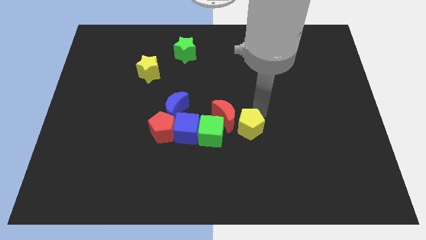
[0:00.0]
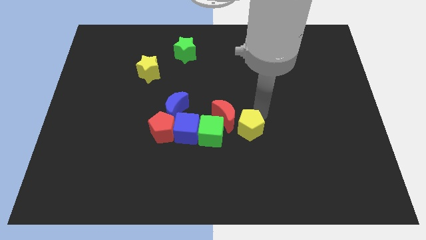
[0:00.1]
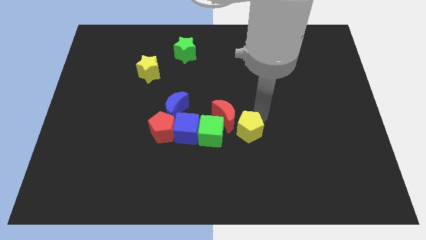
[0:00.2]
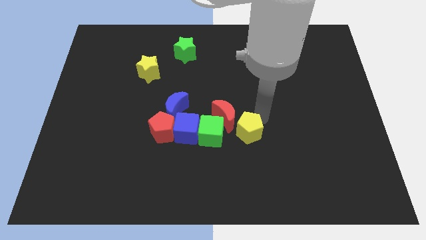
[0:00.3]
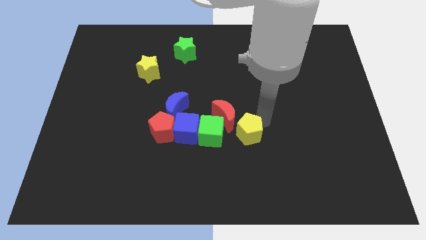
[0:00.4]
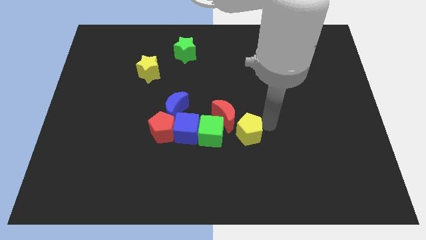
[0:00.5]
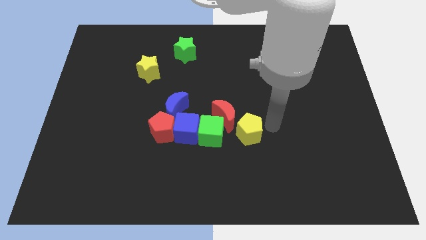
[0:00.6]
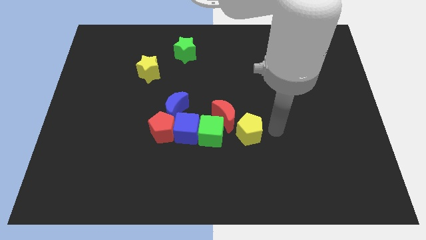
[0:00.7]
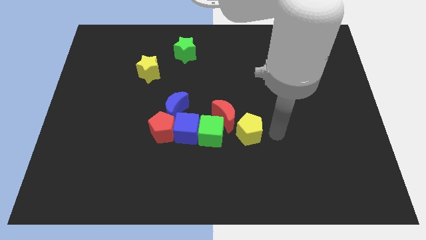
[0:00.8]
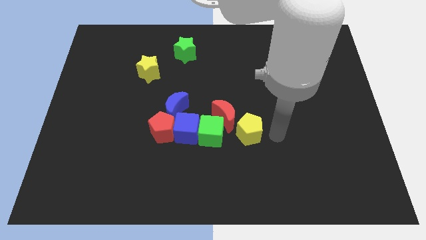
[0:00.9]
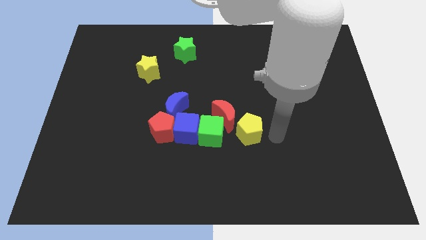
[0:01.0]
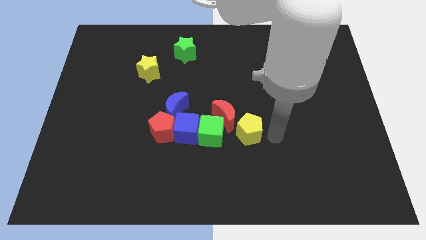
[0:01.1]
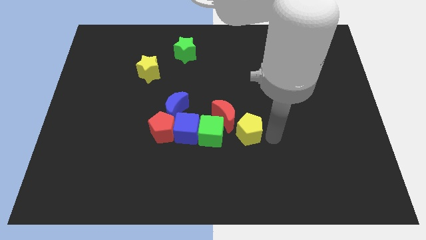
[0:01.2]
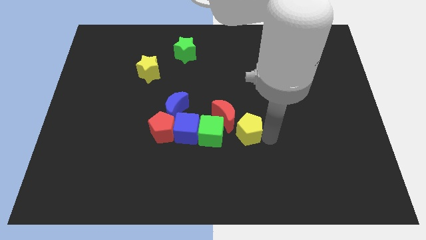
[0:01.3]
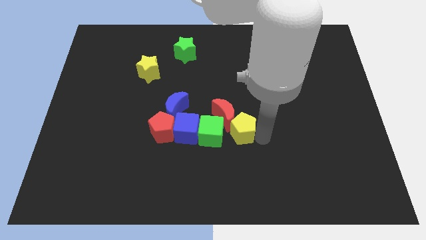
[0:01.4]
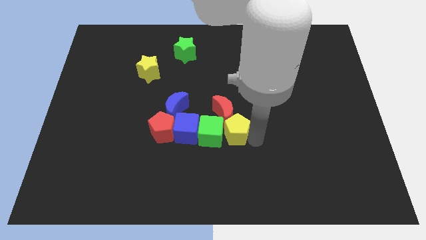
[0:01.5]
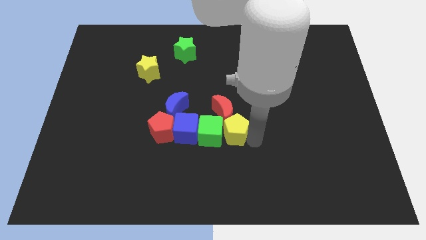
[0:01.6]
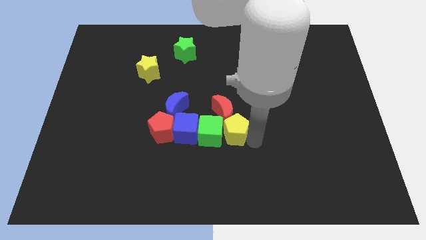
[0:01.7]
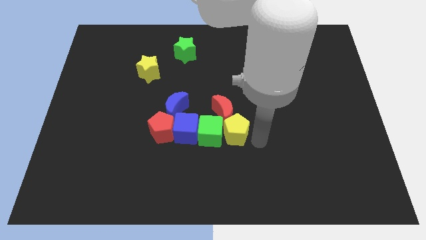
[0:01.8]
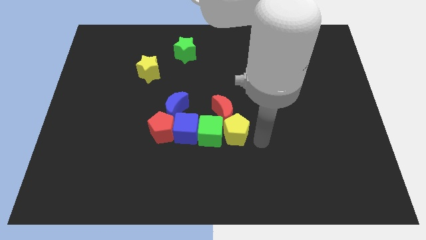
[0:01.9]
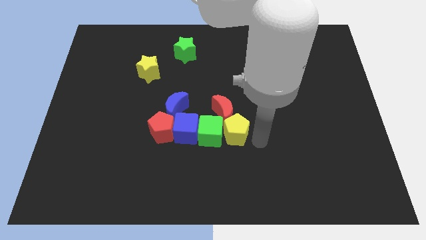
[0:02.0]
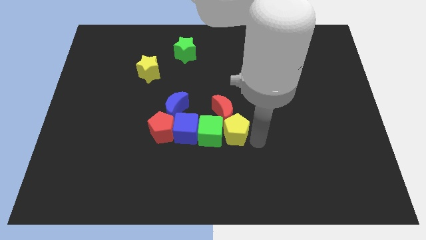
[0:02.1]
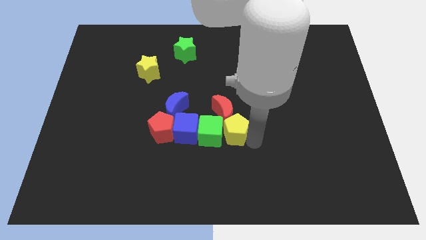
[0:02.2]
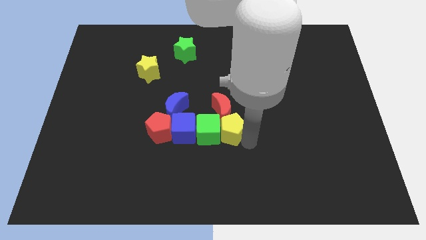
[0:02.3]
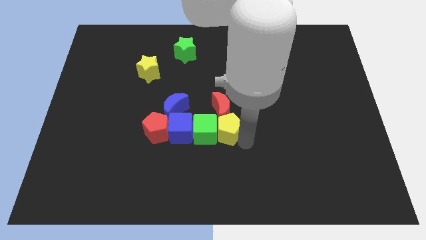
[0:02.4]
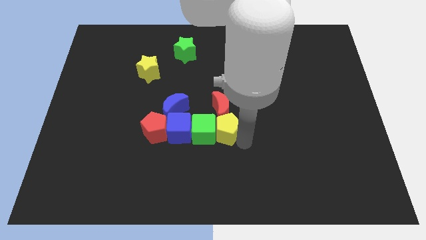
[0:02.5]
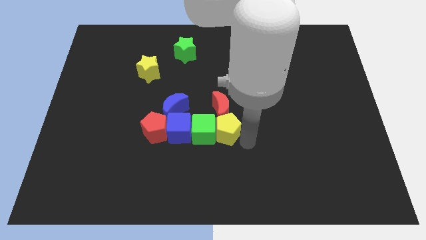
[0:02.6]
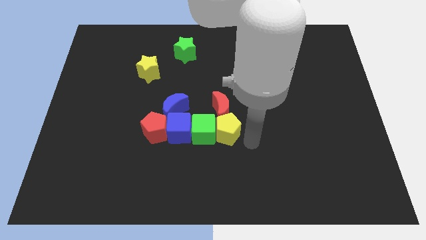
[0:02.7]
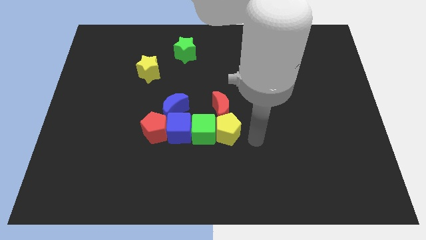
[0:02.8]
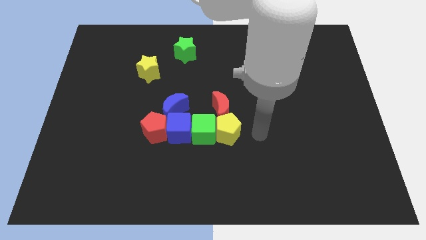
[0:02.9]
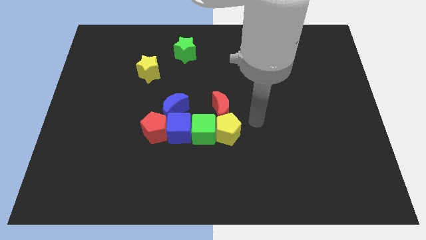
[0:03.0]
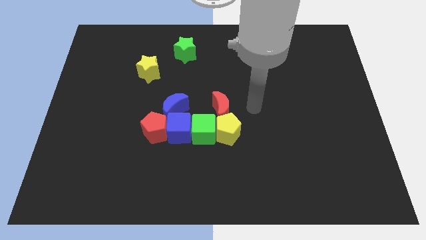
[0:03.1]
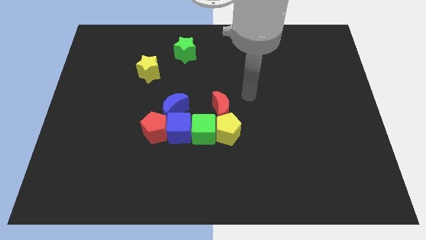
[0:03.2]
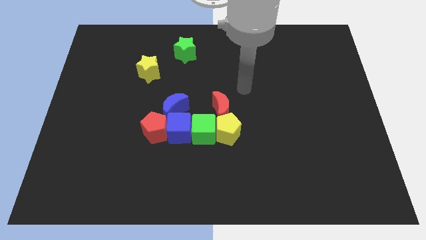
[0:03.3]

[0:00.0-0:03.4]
move the yellow pentagon right to the green cube

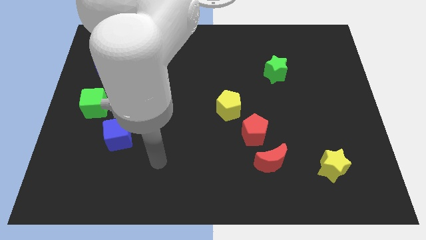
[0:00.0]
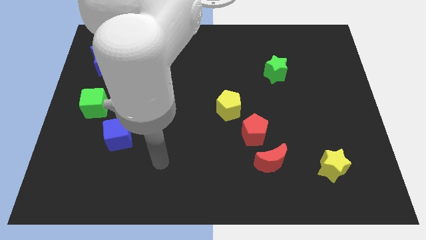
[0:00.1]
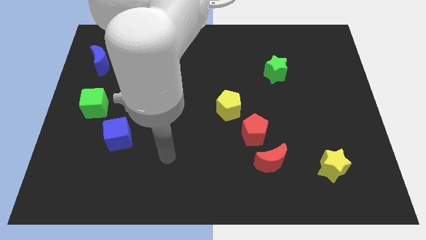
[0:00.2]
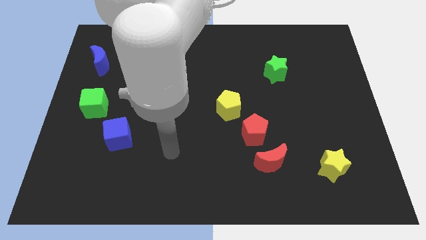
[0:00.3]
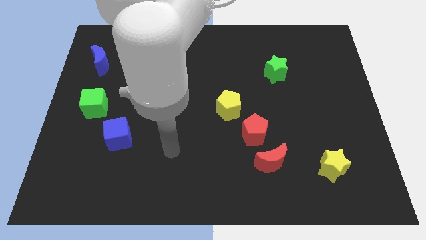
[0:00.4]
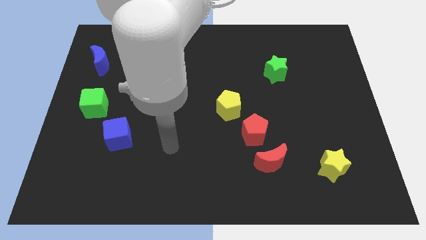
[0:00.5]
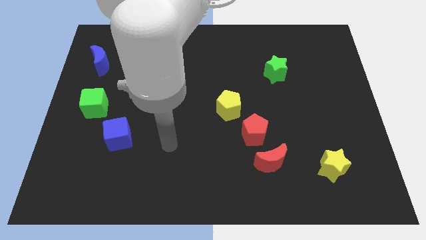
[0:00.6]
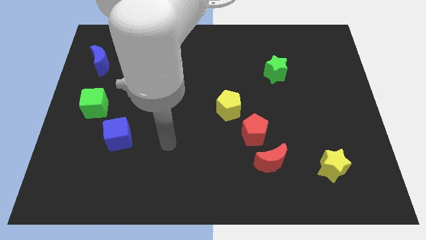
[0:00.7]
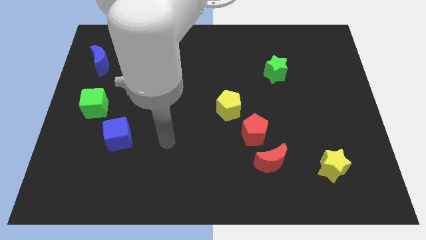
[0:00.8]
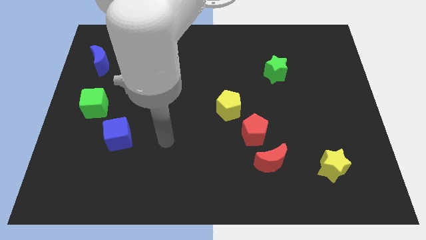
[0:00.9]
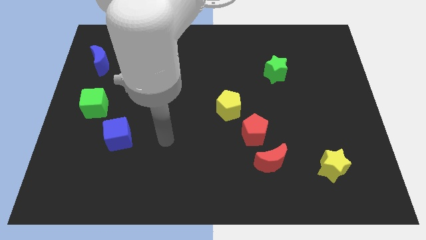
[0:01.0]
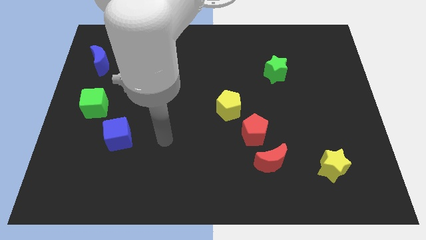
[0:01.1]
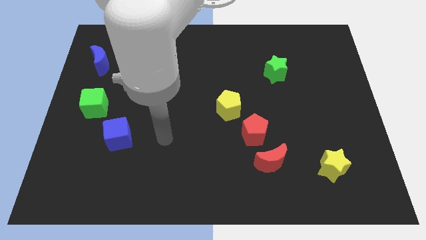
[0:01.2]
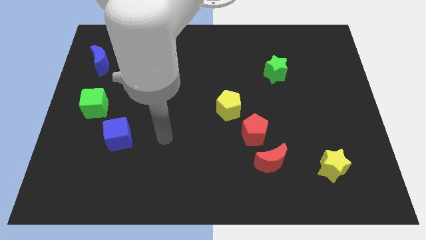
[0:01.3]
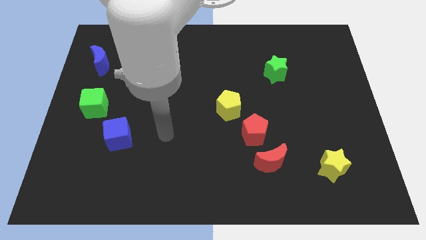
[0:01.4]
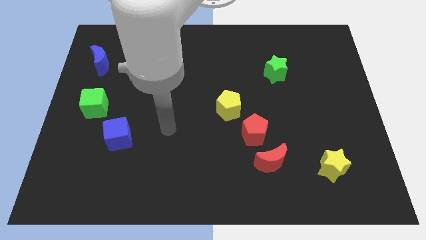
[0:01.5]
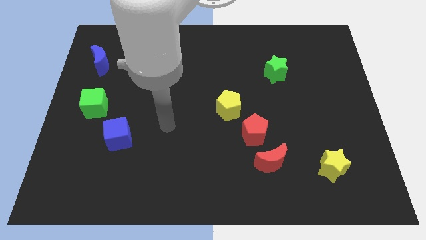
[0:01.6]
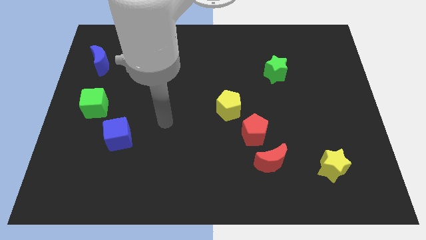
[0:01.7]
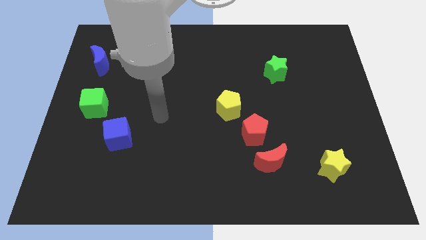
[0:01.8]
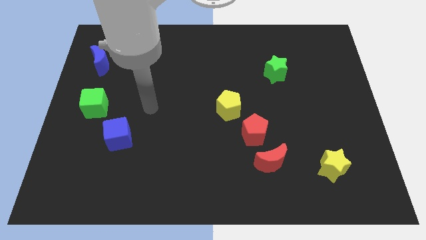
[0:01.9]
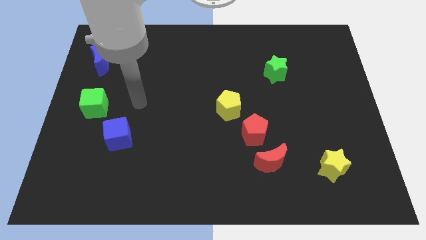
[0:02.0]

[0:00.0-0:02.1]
place your arm to the top of green cube

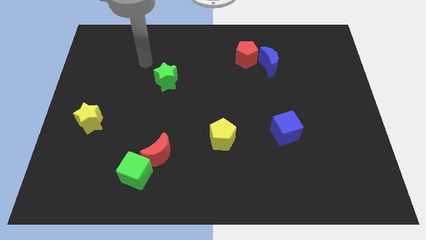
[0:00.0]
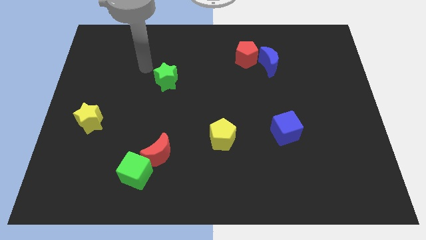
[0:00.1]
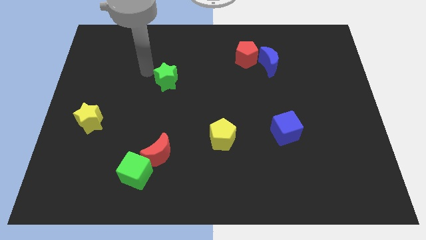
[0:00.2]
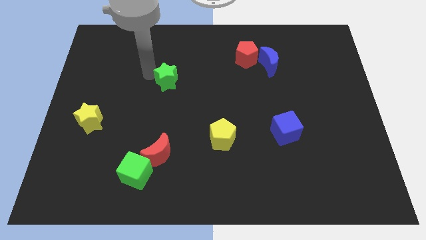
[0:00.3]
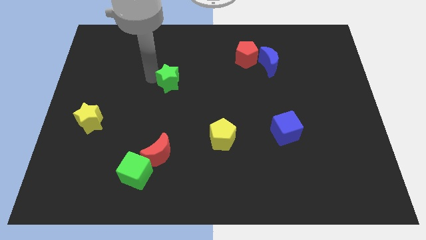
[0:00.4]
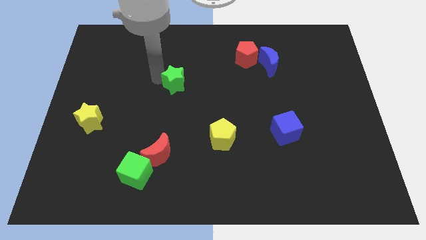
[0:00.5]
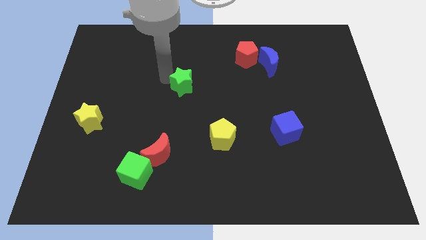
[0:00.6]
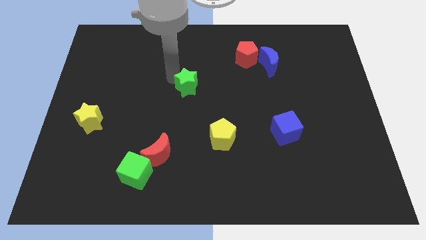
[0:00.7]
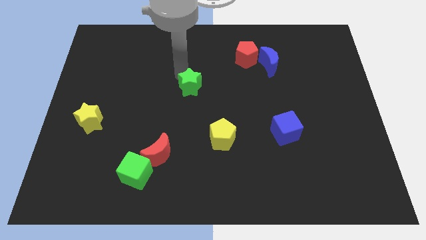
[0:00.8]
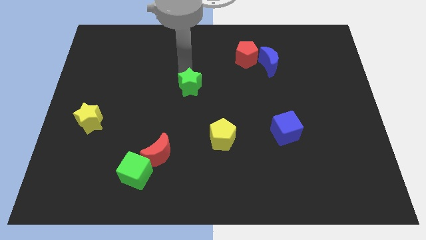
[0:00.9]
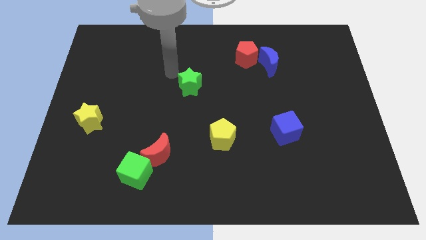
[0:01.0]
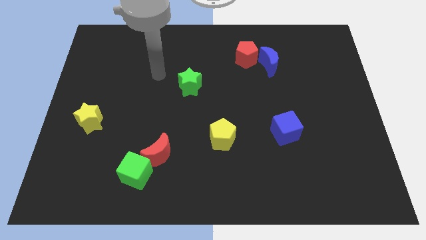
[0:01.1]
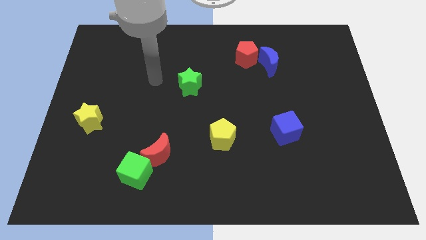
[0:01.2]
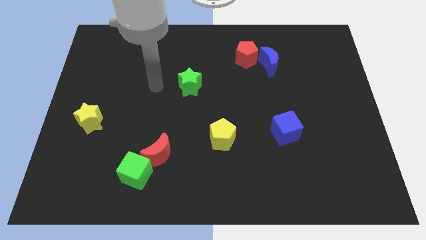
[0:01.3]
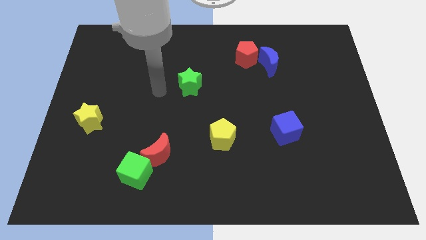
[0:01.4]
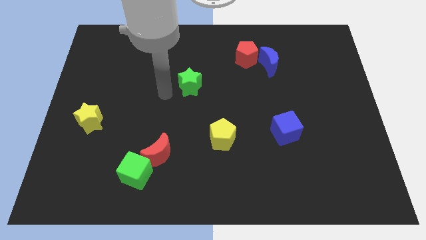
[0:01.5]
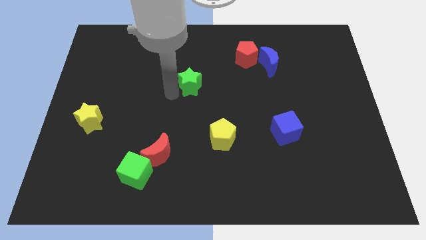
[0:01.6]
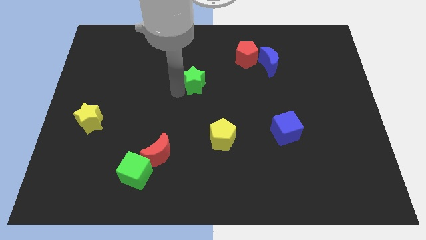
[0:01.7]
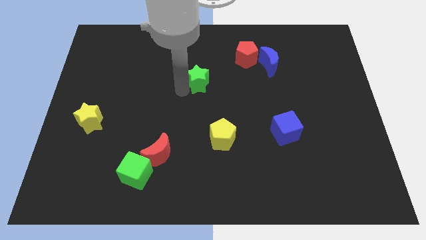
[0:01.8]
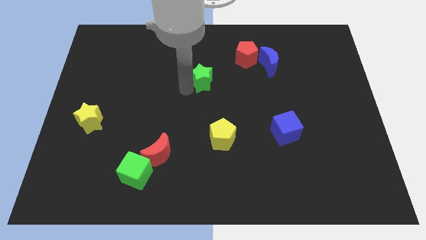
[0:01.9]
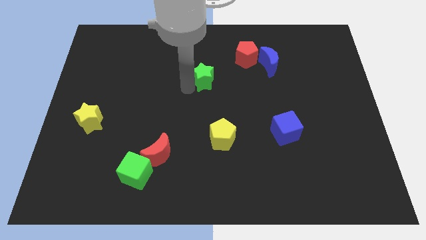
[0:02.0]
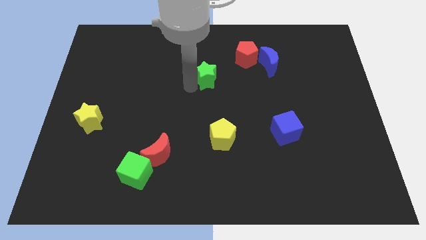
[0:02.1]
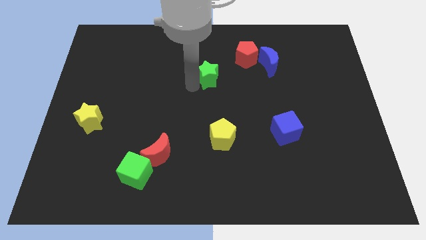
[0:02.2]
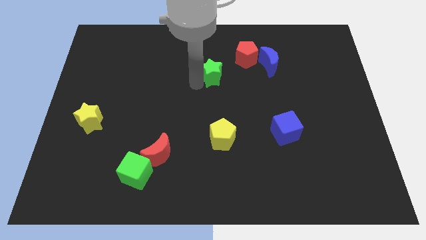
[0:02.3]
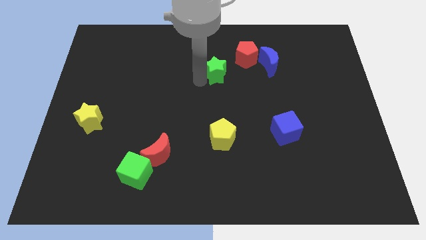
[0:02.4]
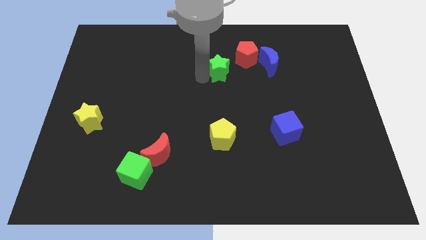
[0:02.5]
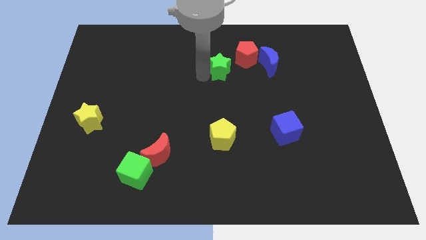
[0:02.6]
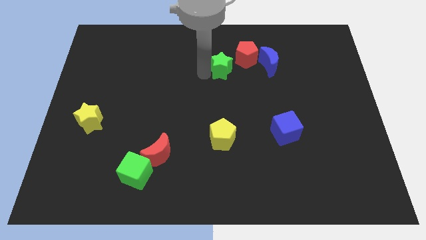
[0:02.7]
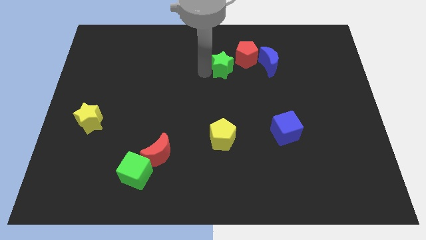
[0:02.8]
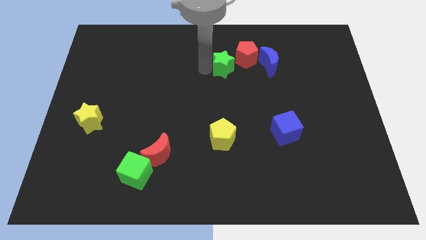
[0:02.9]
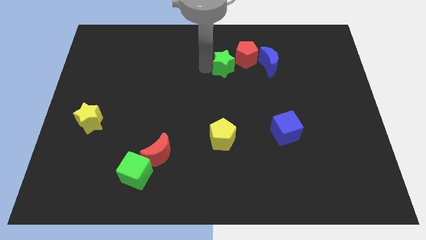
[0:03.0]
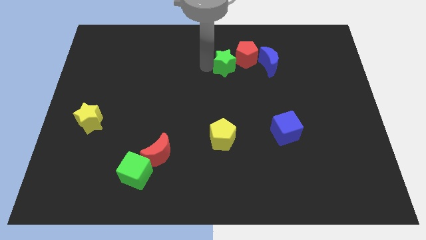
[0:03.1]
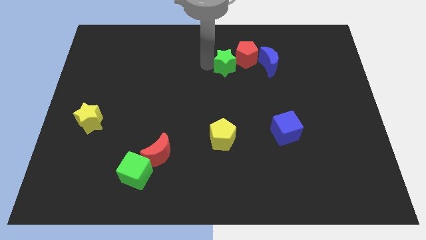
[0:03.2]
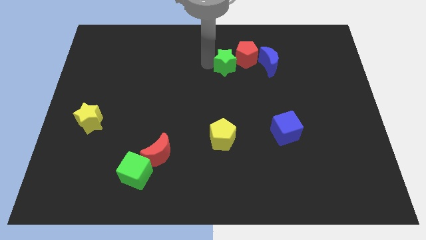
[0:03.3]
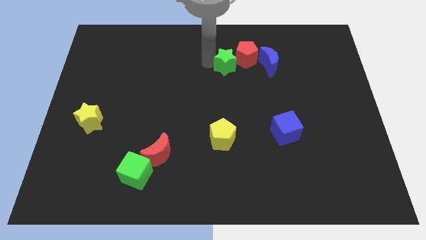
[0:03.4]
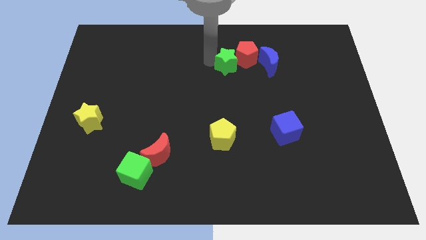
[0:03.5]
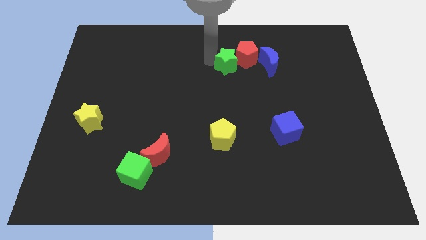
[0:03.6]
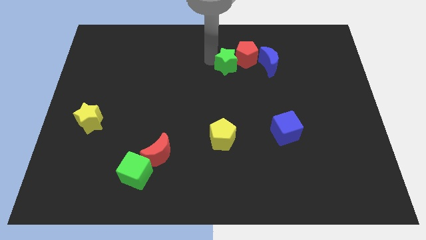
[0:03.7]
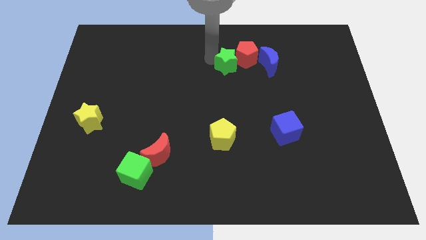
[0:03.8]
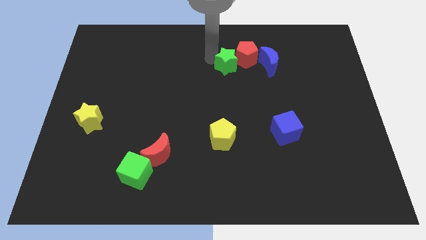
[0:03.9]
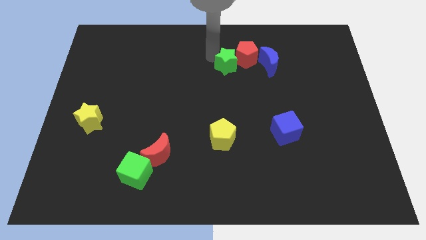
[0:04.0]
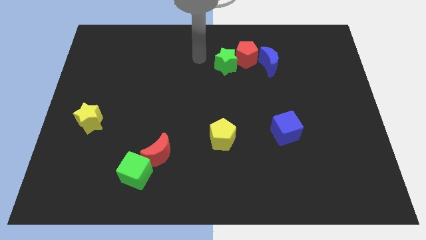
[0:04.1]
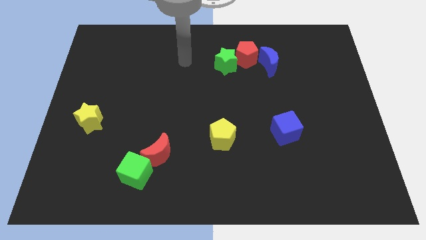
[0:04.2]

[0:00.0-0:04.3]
move the green star close to the red pentagon
